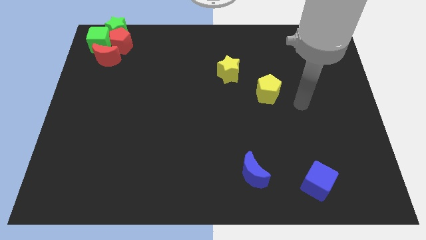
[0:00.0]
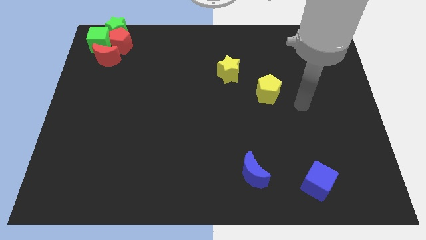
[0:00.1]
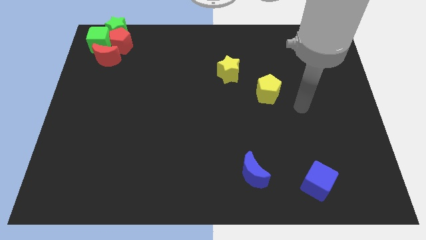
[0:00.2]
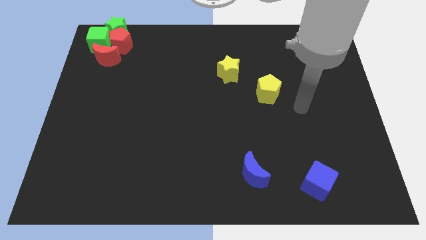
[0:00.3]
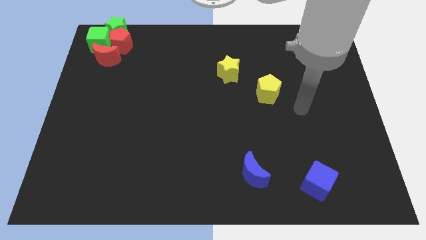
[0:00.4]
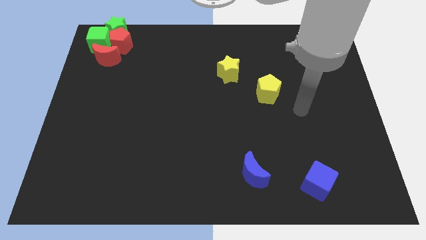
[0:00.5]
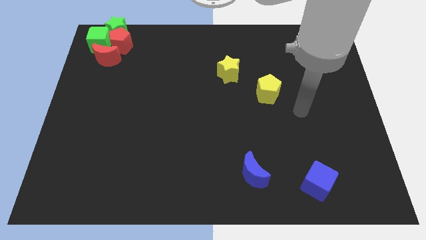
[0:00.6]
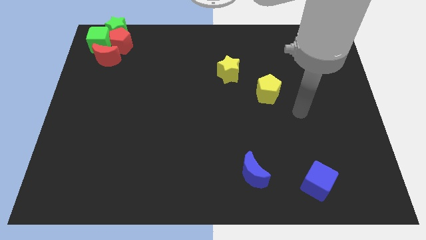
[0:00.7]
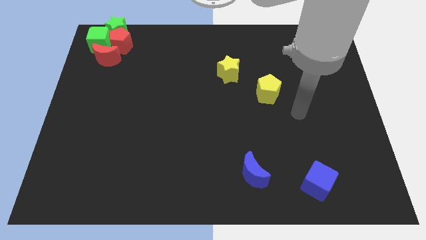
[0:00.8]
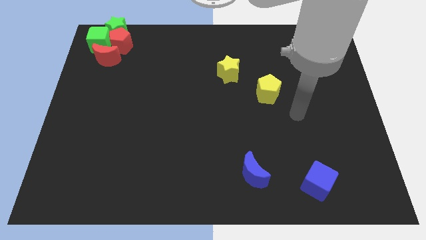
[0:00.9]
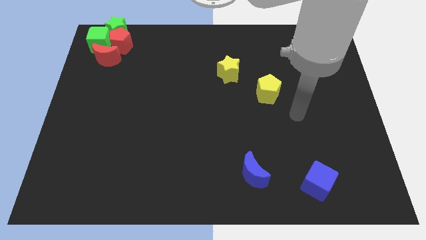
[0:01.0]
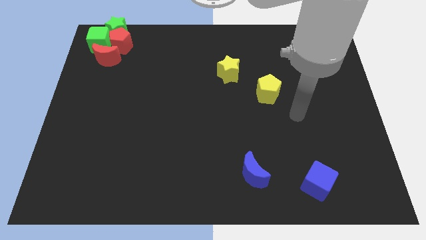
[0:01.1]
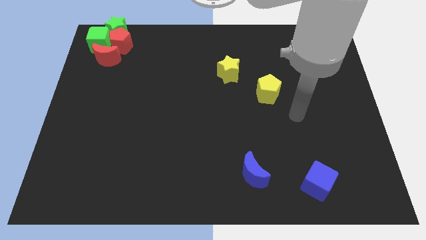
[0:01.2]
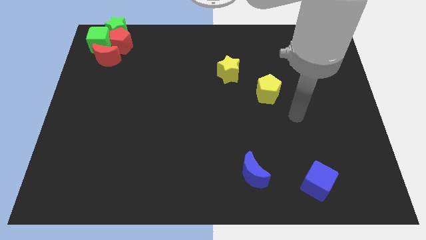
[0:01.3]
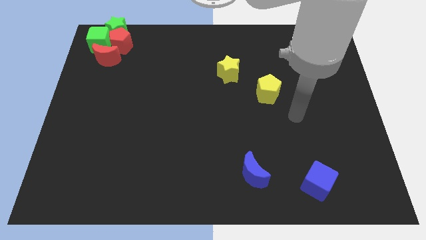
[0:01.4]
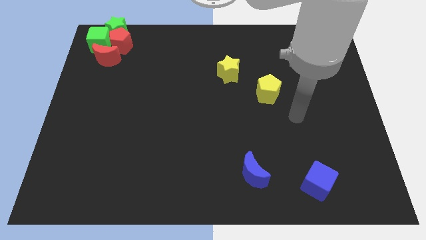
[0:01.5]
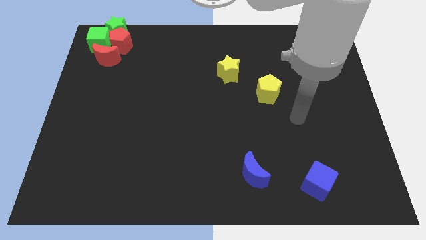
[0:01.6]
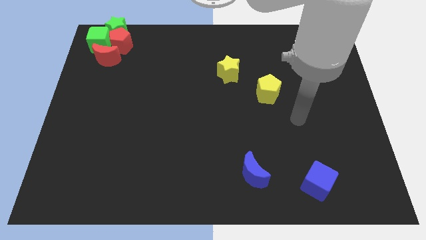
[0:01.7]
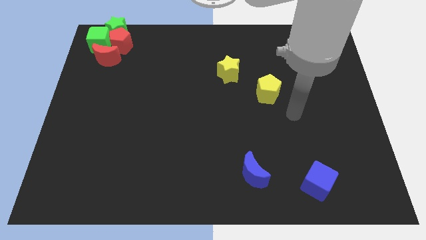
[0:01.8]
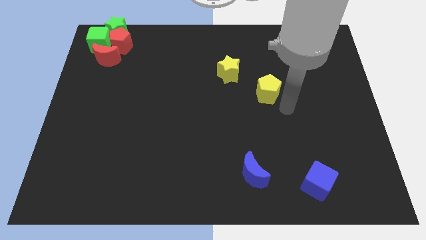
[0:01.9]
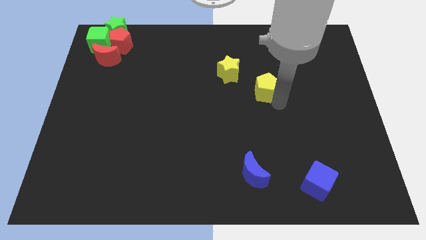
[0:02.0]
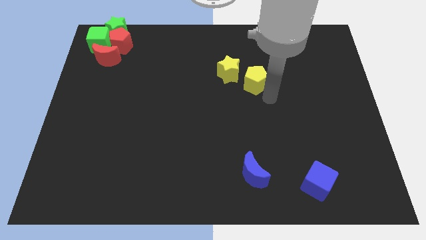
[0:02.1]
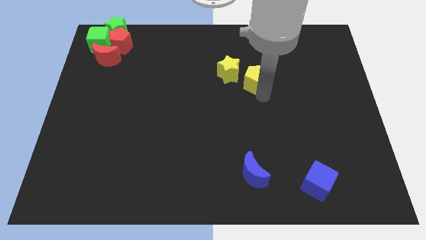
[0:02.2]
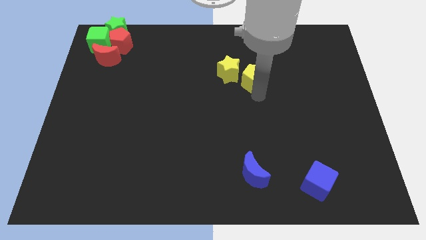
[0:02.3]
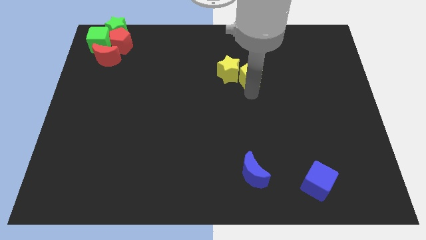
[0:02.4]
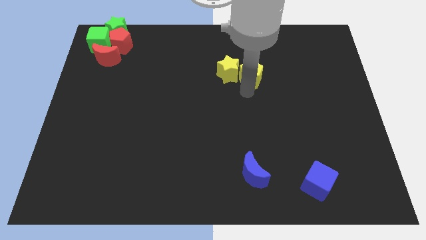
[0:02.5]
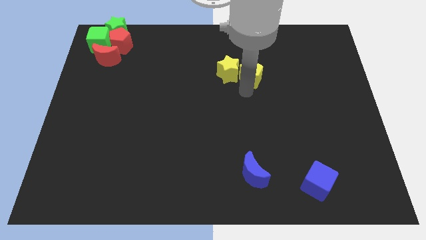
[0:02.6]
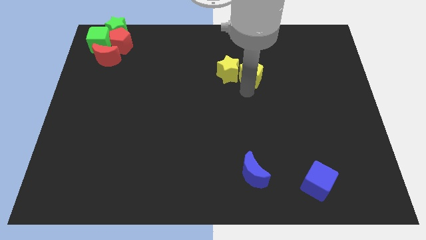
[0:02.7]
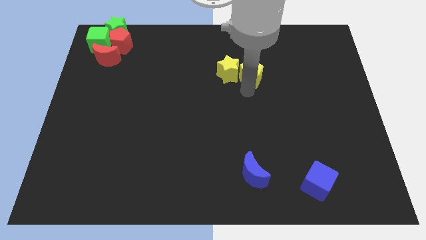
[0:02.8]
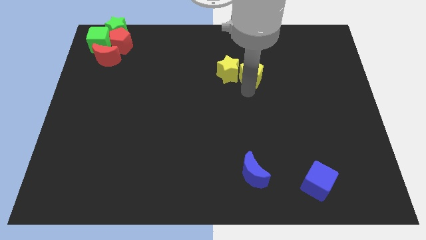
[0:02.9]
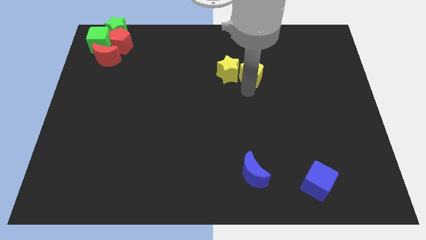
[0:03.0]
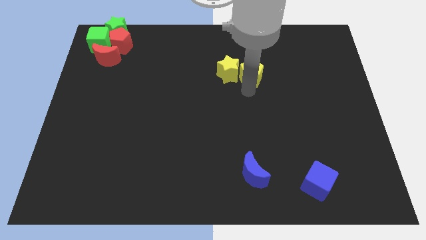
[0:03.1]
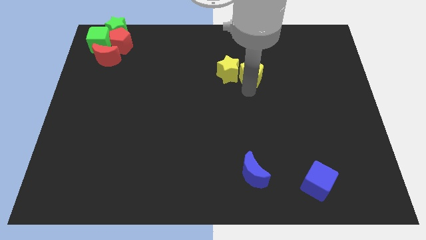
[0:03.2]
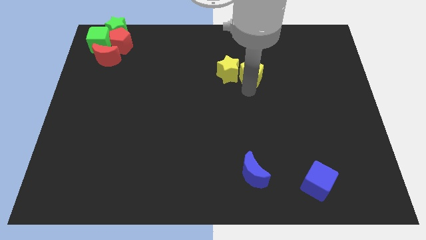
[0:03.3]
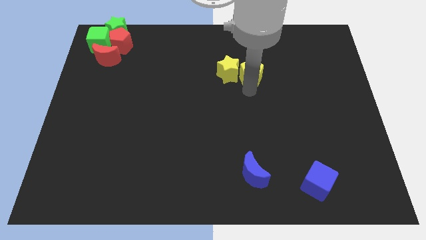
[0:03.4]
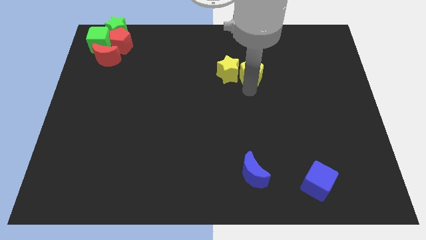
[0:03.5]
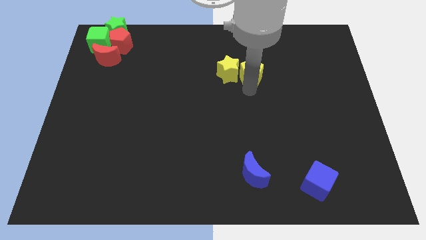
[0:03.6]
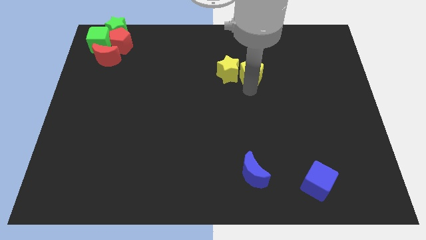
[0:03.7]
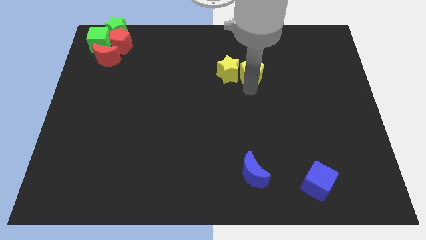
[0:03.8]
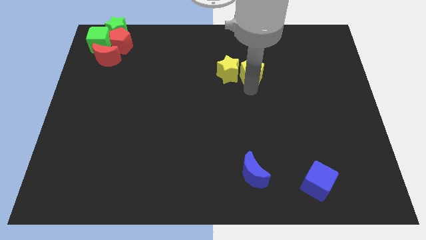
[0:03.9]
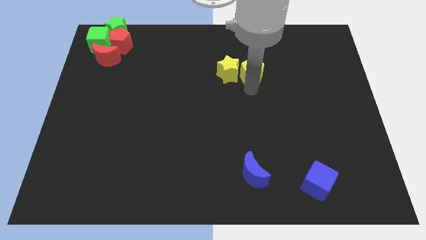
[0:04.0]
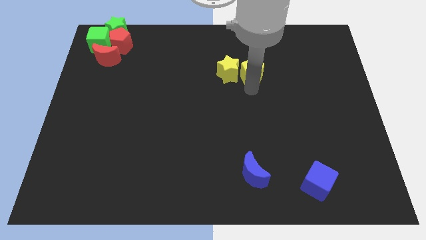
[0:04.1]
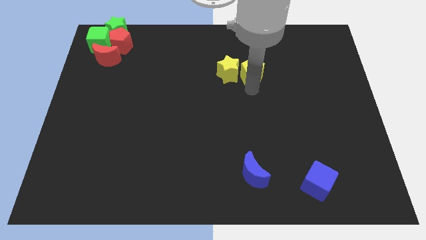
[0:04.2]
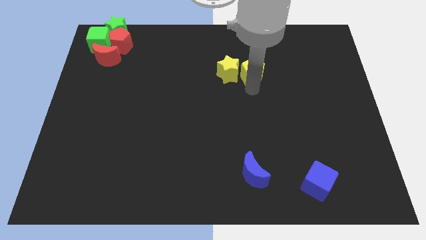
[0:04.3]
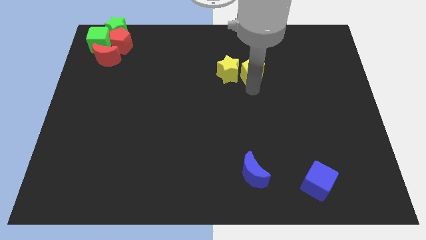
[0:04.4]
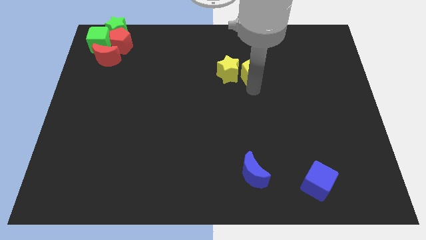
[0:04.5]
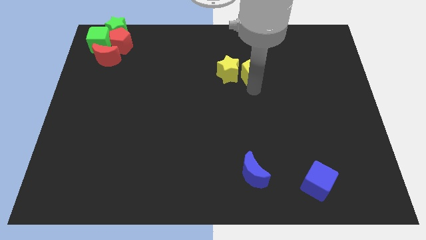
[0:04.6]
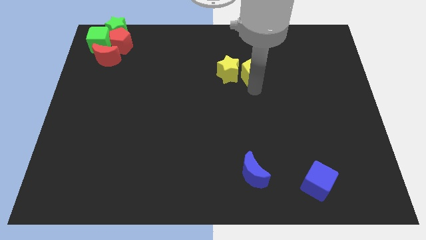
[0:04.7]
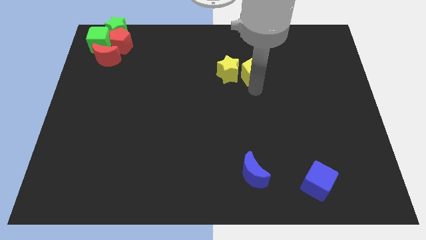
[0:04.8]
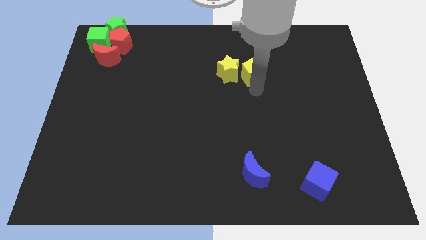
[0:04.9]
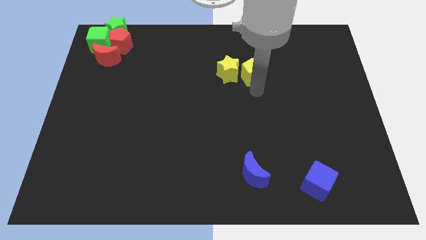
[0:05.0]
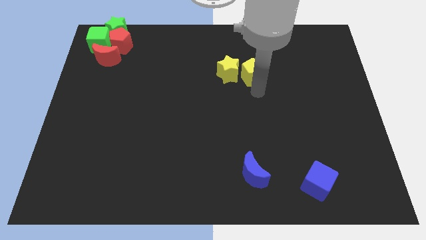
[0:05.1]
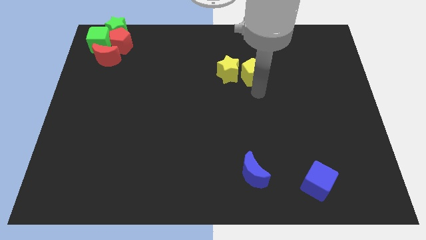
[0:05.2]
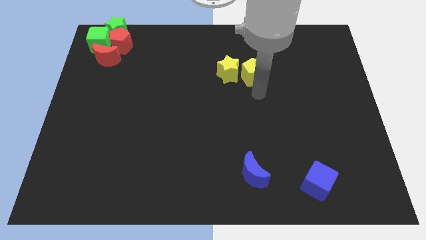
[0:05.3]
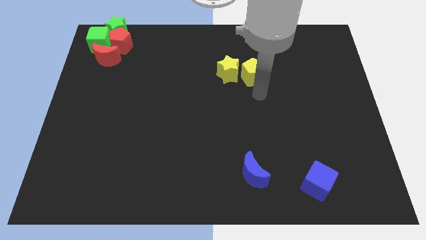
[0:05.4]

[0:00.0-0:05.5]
move the yellow pentagon to the right side of the yellow star

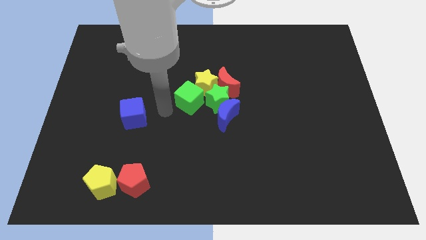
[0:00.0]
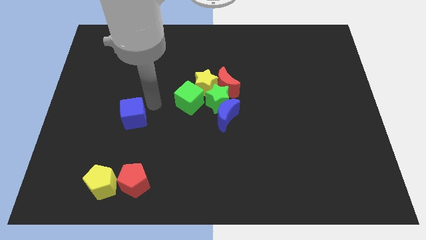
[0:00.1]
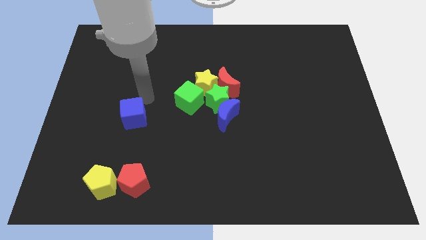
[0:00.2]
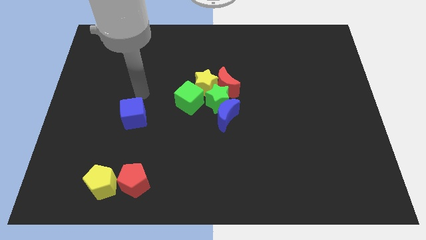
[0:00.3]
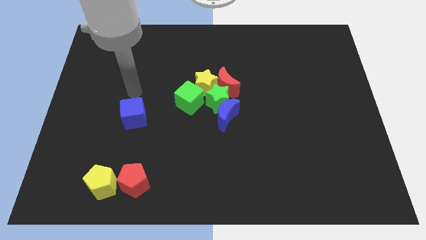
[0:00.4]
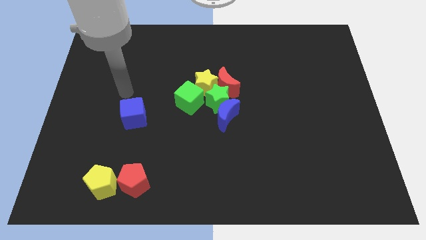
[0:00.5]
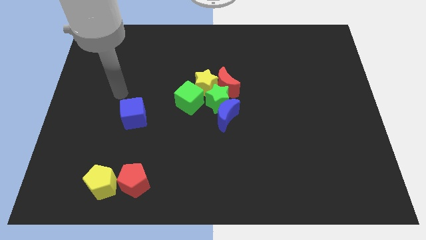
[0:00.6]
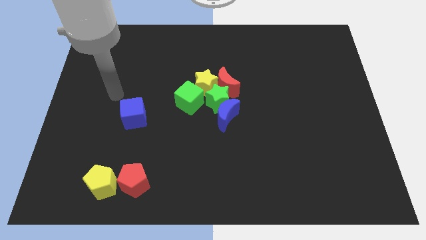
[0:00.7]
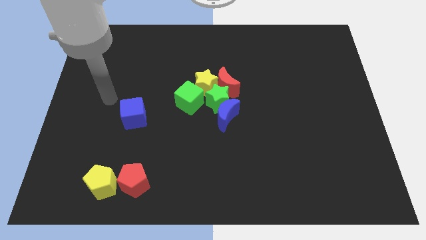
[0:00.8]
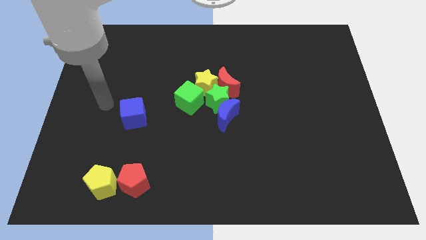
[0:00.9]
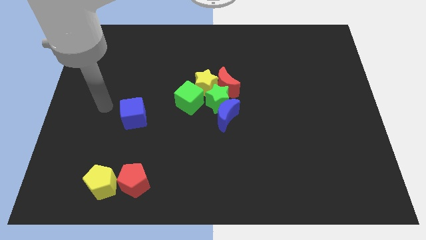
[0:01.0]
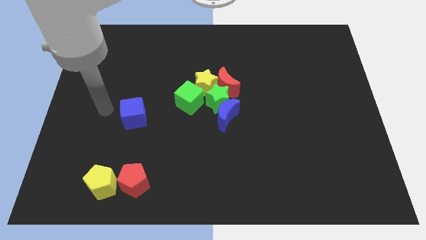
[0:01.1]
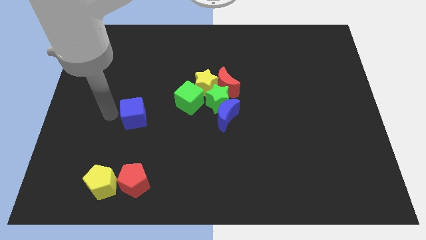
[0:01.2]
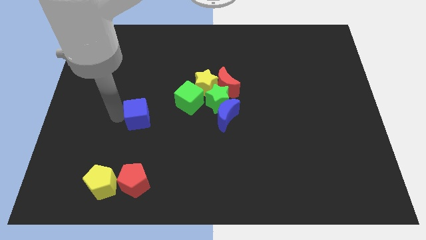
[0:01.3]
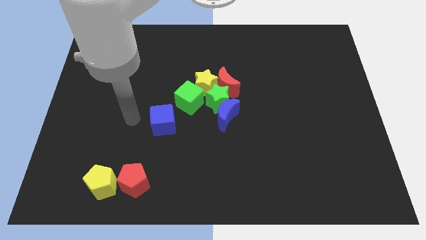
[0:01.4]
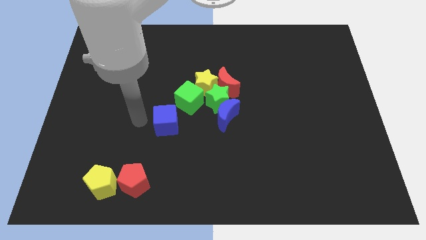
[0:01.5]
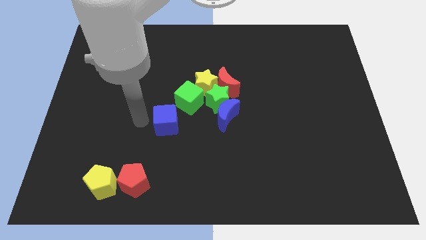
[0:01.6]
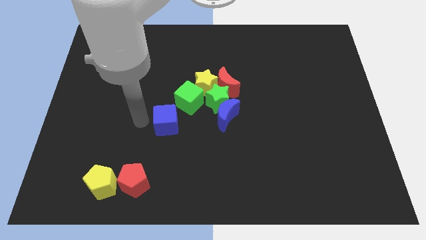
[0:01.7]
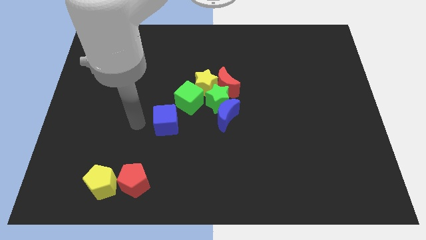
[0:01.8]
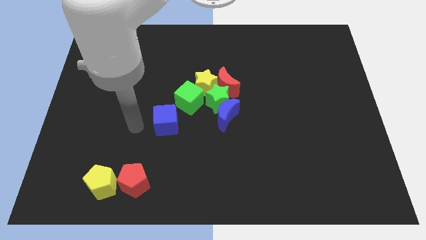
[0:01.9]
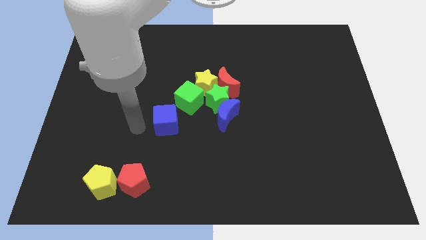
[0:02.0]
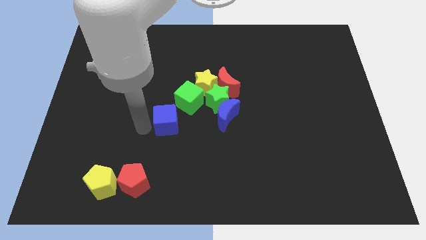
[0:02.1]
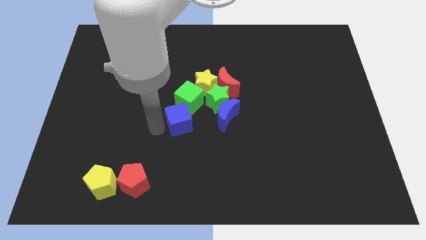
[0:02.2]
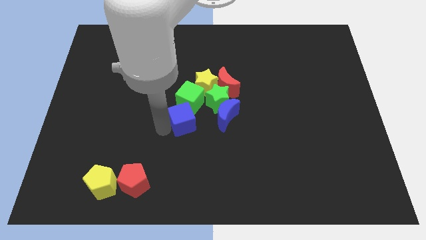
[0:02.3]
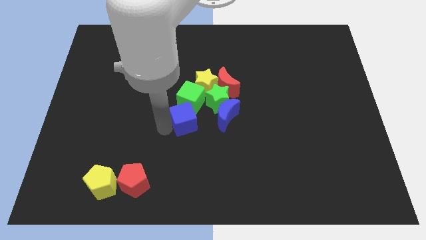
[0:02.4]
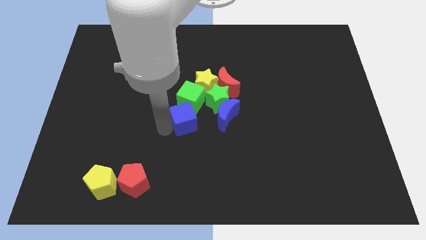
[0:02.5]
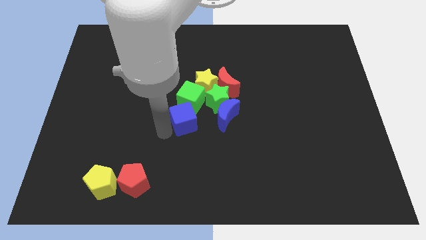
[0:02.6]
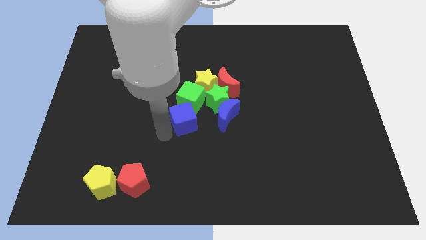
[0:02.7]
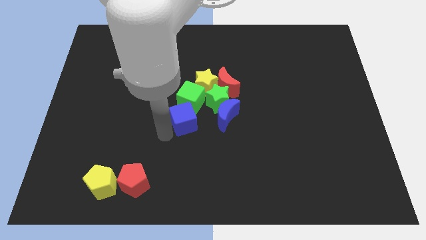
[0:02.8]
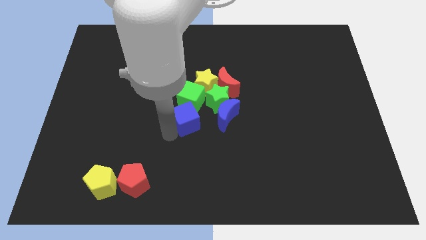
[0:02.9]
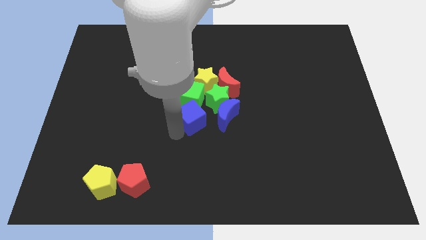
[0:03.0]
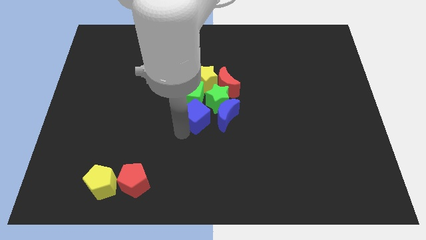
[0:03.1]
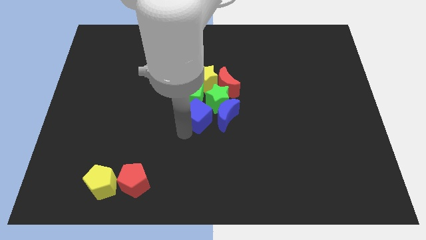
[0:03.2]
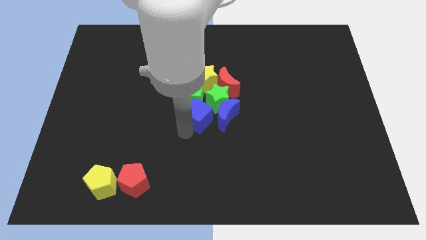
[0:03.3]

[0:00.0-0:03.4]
push the blue cube towards the group of objects

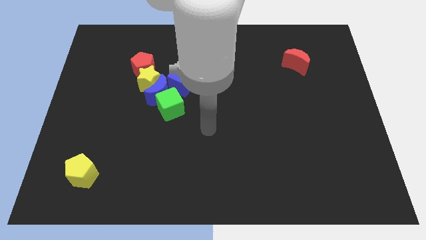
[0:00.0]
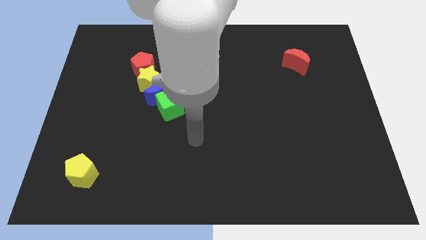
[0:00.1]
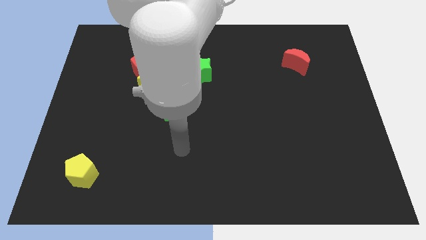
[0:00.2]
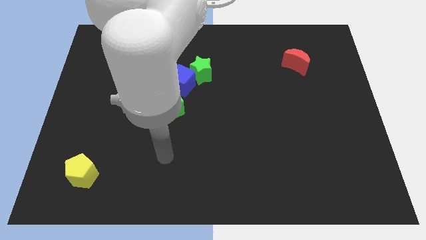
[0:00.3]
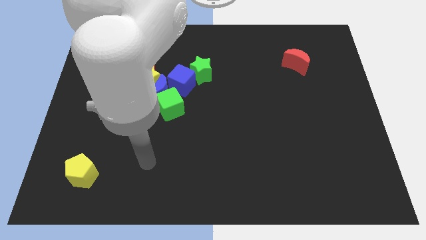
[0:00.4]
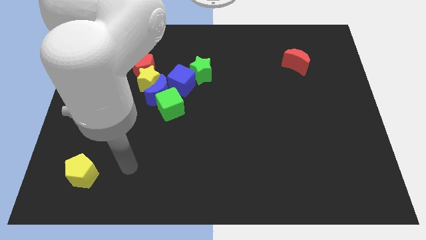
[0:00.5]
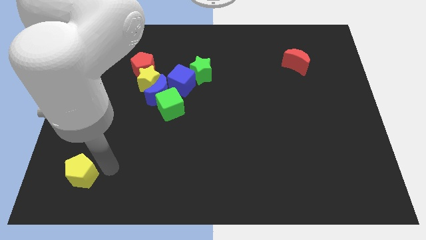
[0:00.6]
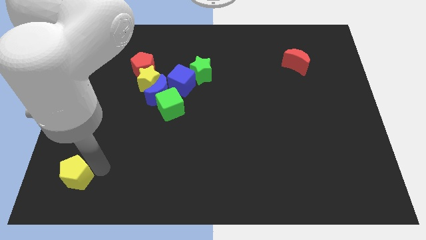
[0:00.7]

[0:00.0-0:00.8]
move your hand to the right of the yellow pentagon
